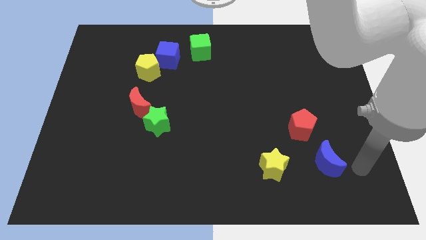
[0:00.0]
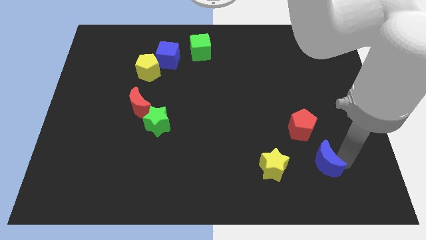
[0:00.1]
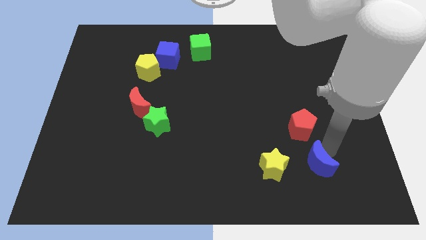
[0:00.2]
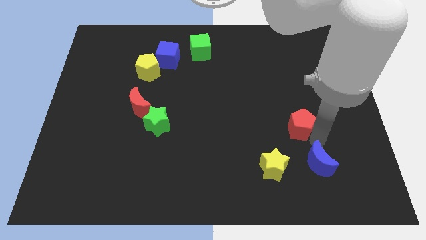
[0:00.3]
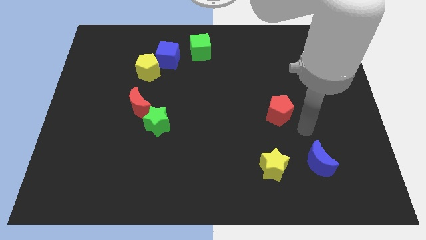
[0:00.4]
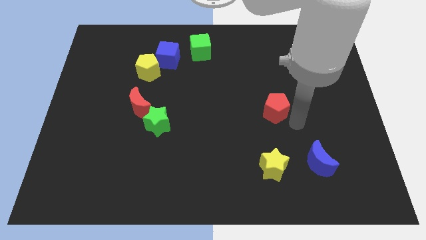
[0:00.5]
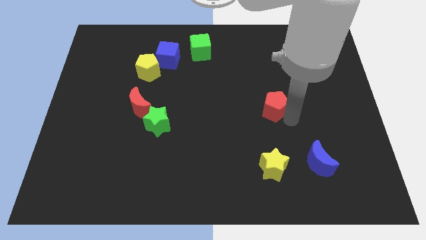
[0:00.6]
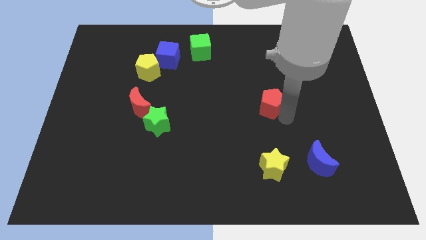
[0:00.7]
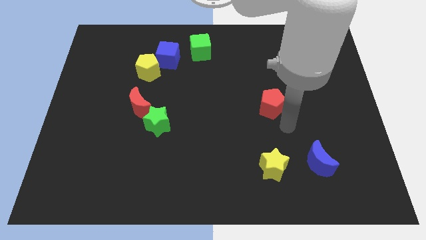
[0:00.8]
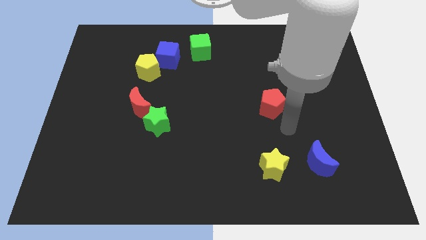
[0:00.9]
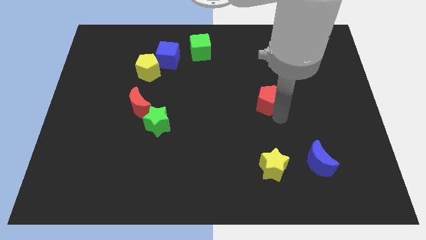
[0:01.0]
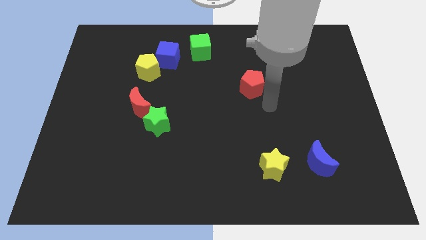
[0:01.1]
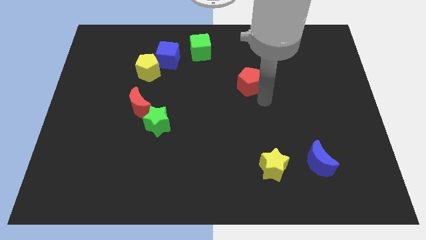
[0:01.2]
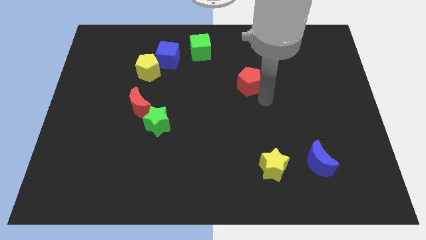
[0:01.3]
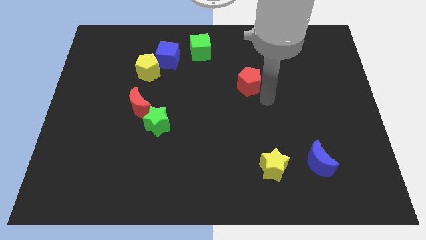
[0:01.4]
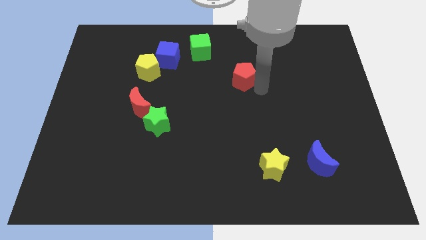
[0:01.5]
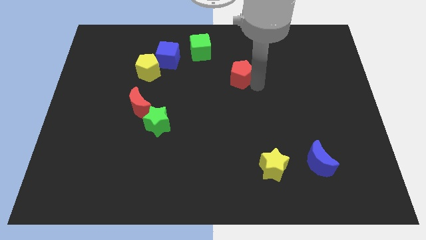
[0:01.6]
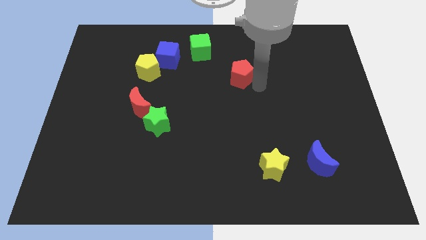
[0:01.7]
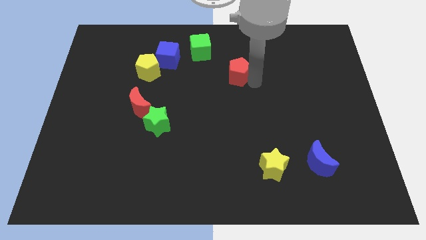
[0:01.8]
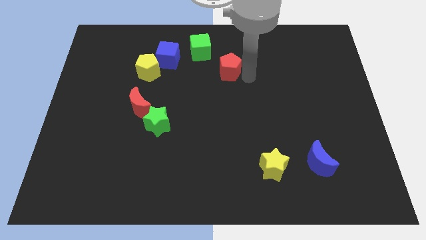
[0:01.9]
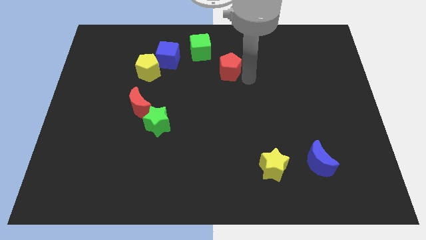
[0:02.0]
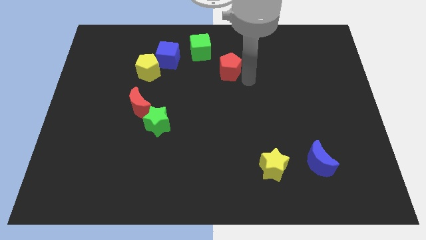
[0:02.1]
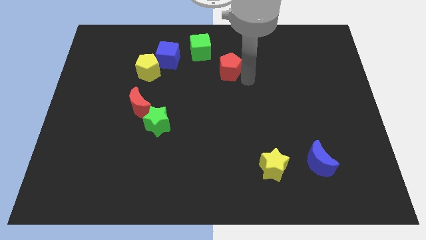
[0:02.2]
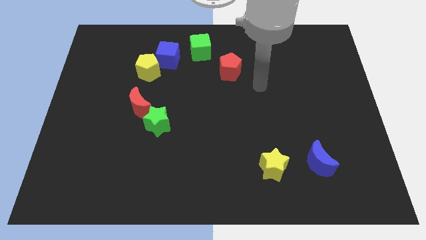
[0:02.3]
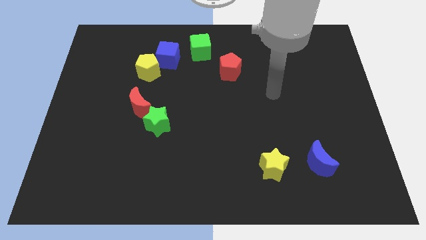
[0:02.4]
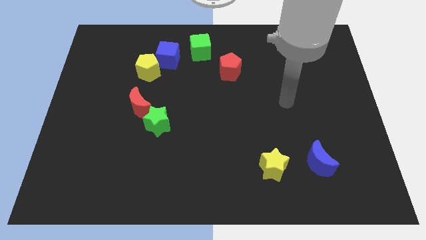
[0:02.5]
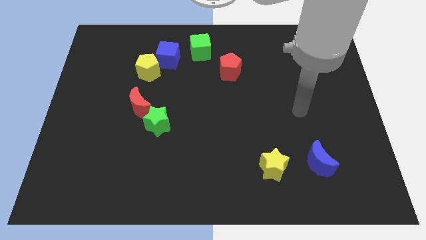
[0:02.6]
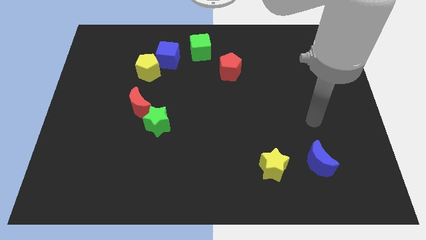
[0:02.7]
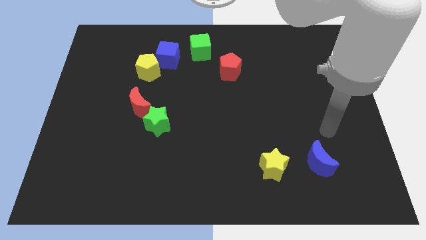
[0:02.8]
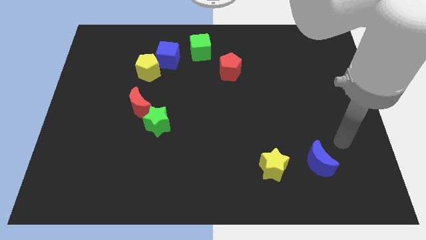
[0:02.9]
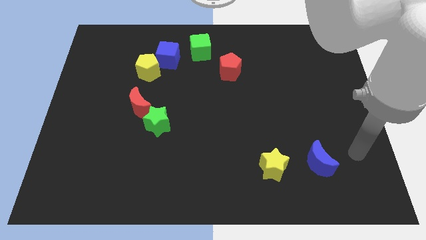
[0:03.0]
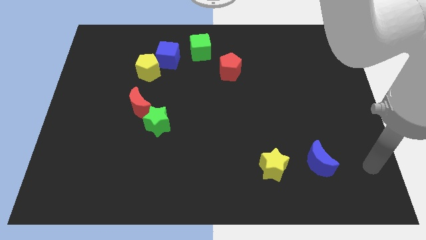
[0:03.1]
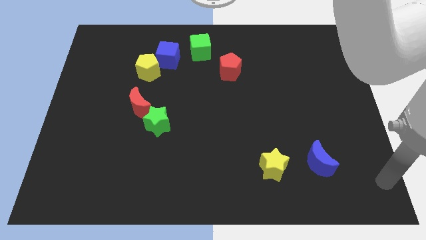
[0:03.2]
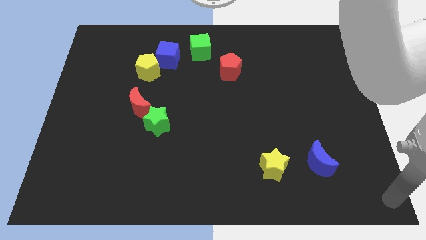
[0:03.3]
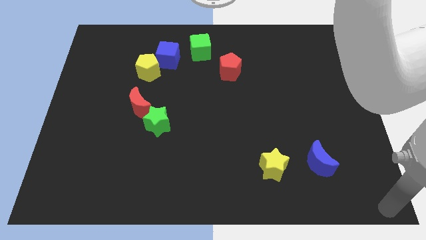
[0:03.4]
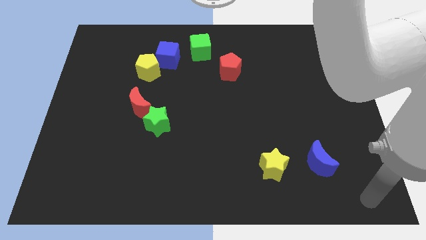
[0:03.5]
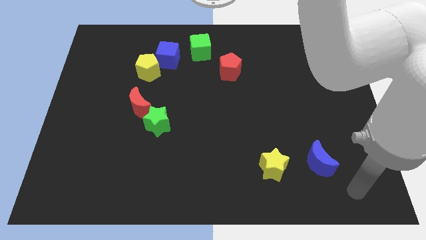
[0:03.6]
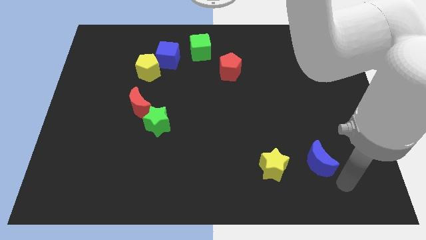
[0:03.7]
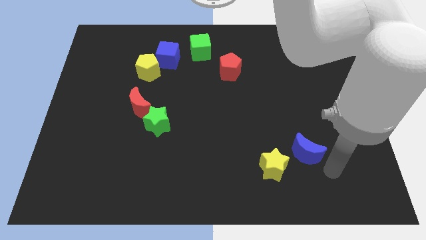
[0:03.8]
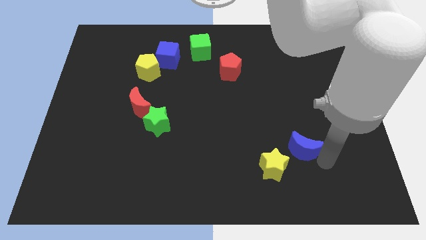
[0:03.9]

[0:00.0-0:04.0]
push the red pentagon diagonally to the bottom right of the green cube

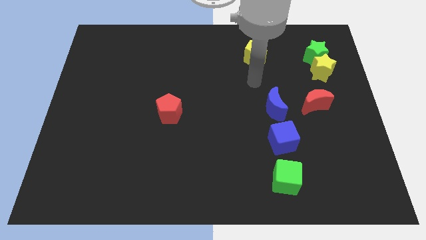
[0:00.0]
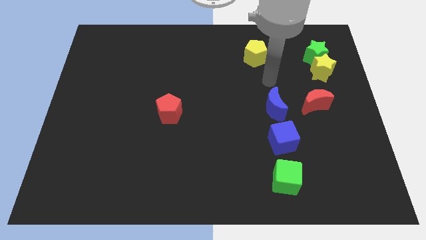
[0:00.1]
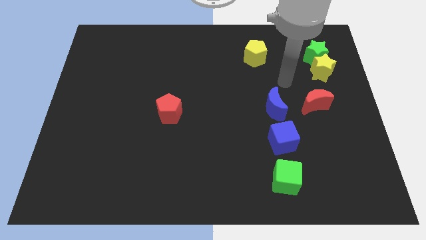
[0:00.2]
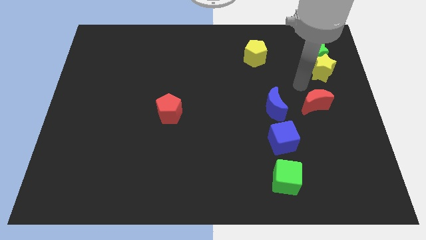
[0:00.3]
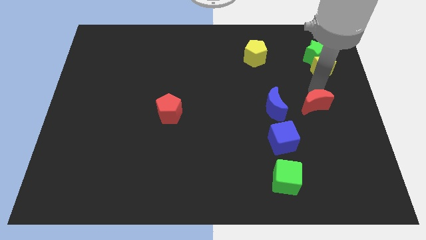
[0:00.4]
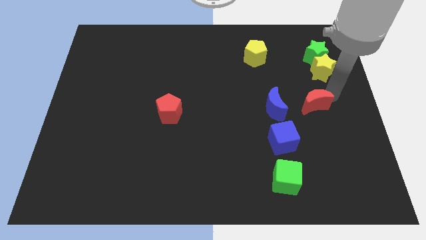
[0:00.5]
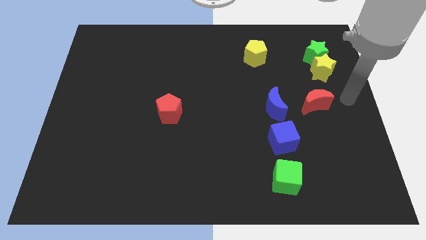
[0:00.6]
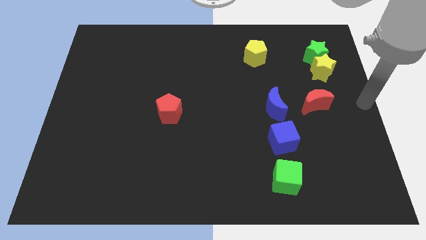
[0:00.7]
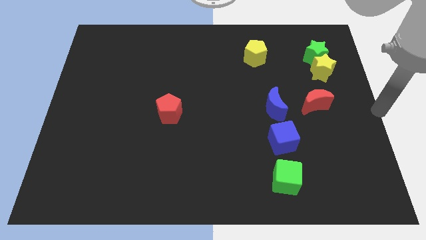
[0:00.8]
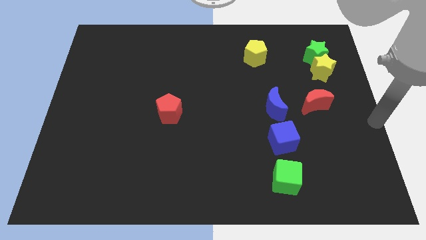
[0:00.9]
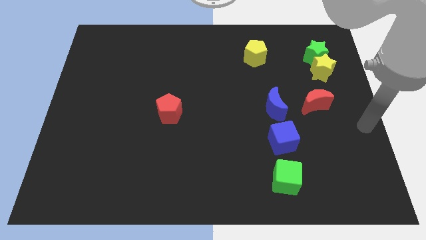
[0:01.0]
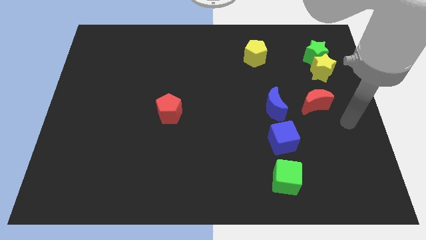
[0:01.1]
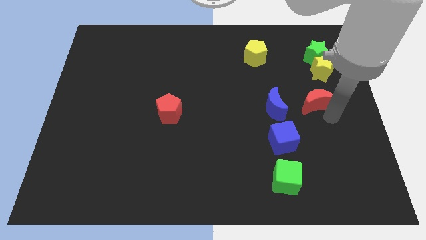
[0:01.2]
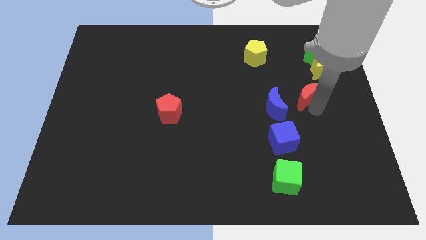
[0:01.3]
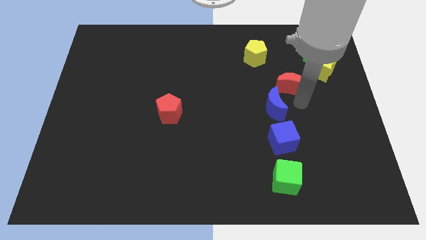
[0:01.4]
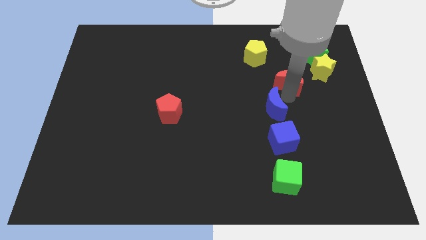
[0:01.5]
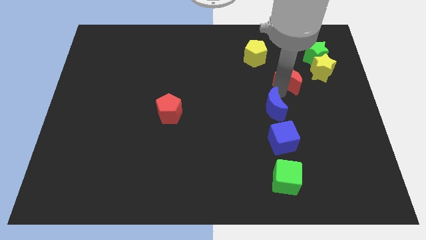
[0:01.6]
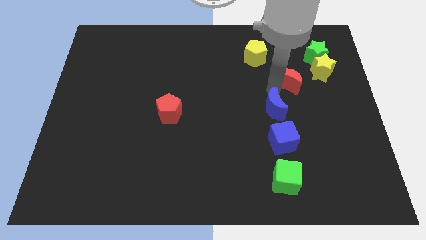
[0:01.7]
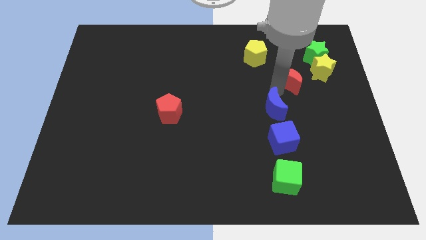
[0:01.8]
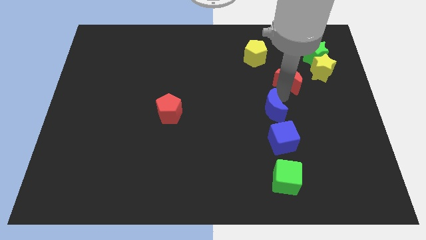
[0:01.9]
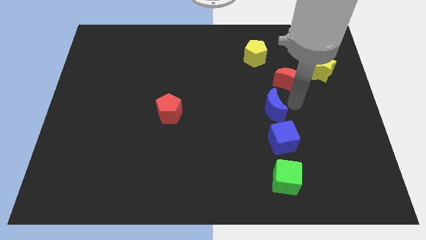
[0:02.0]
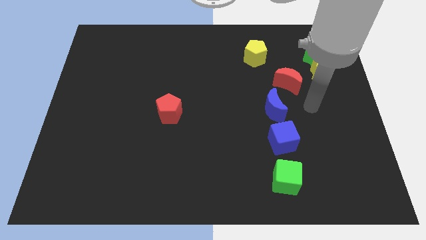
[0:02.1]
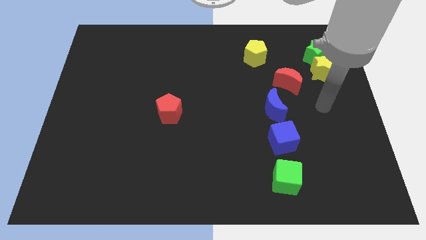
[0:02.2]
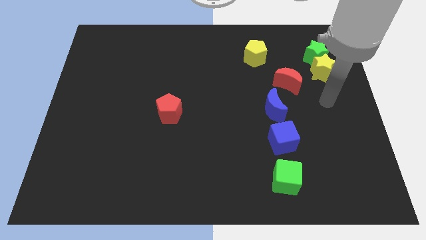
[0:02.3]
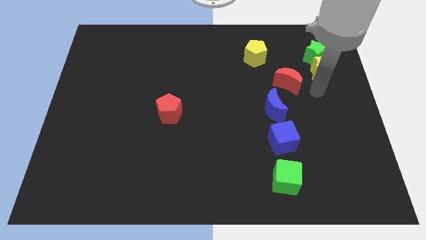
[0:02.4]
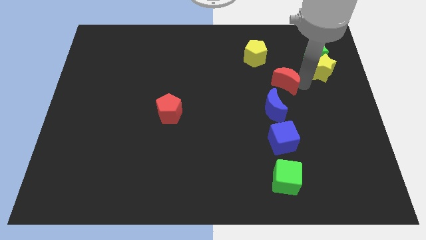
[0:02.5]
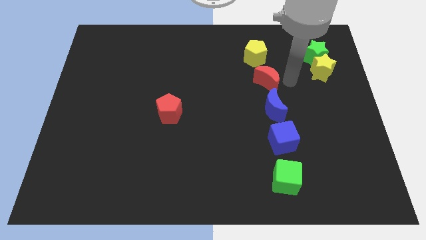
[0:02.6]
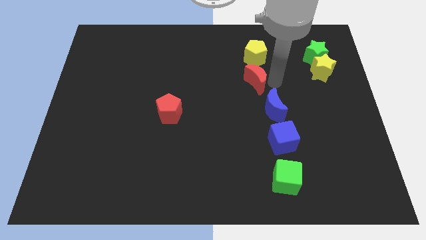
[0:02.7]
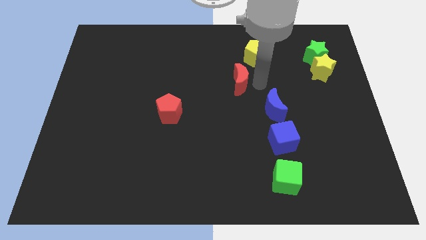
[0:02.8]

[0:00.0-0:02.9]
place the red moon close to the yellow pentagon

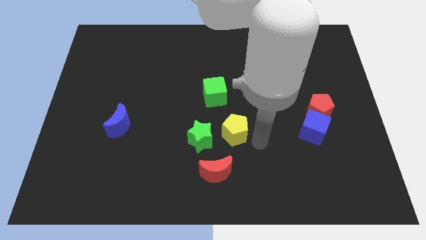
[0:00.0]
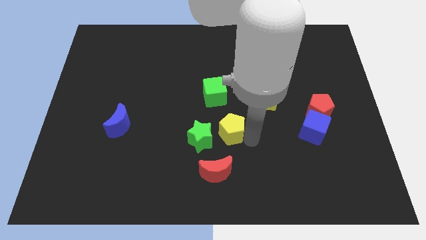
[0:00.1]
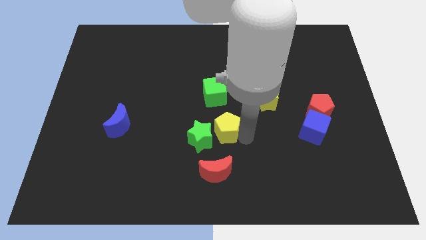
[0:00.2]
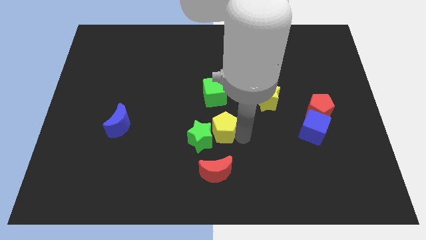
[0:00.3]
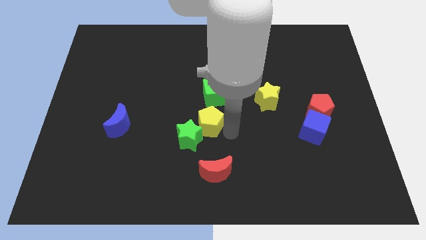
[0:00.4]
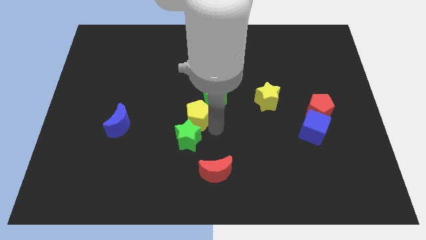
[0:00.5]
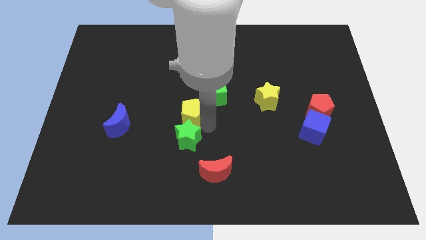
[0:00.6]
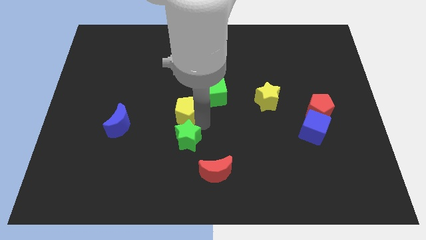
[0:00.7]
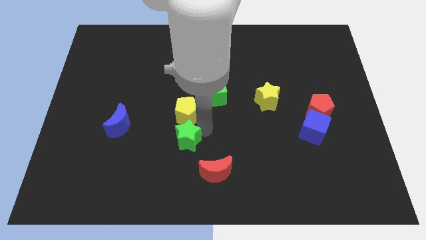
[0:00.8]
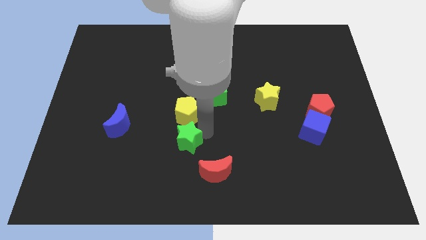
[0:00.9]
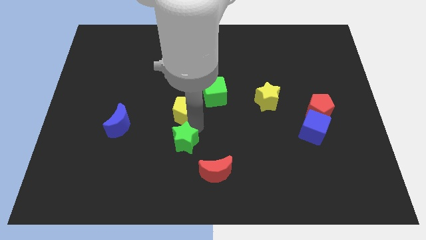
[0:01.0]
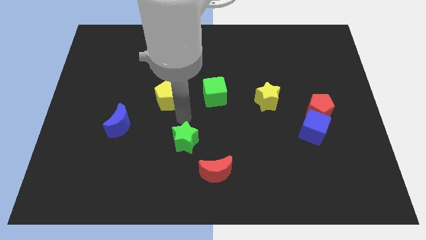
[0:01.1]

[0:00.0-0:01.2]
push the yellow pentagon and green star towards the left side of the board

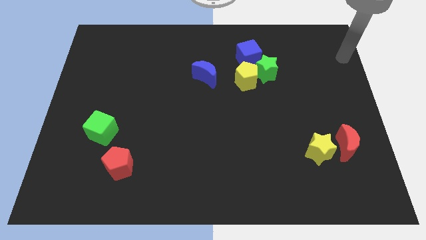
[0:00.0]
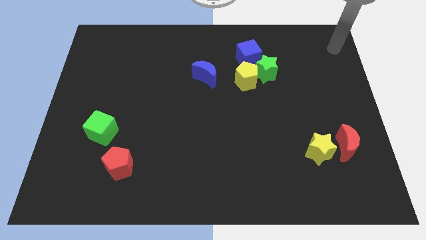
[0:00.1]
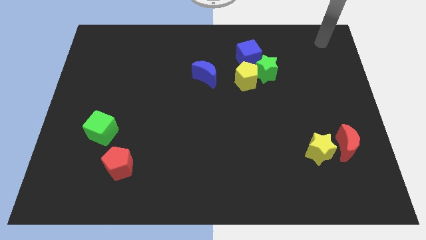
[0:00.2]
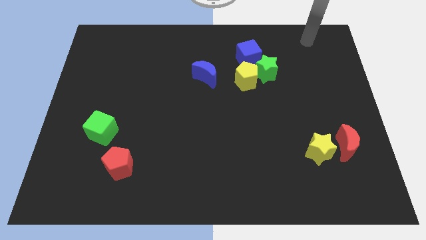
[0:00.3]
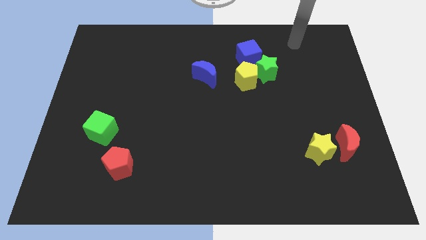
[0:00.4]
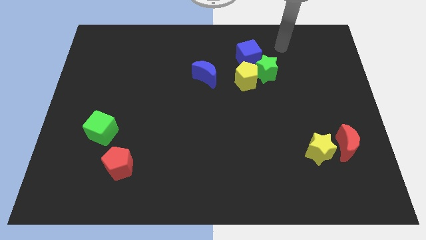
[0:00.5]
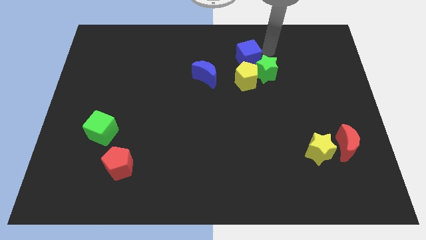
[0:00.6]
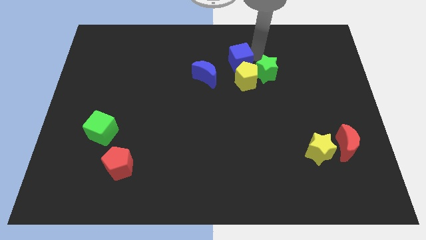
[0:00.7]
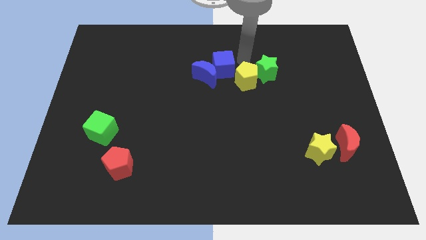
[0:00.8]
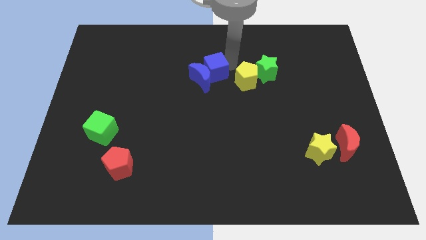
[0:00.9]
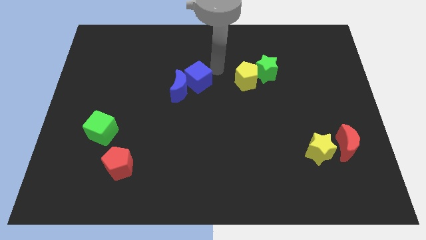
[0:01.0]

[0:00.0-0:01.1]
push blue cube into blue crescent
